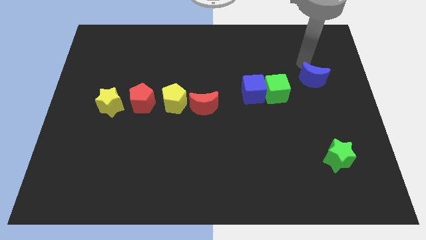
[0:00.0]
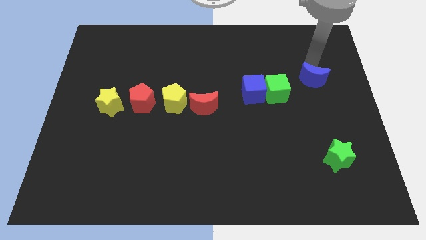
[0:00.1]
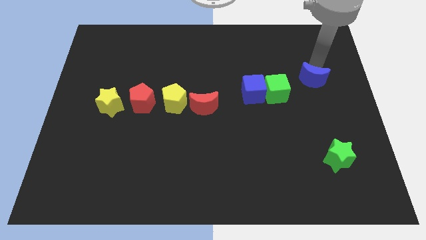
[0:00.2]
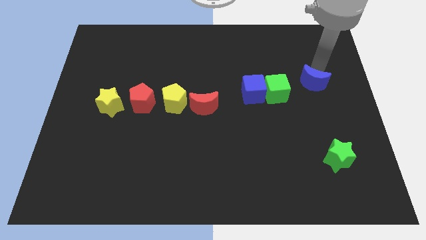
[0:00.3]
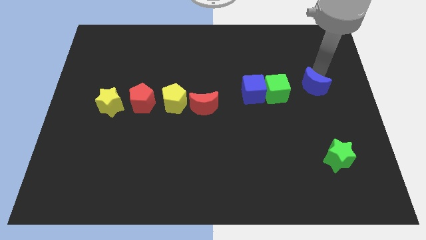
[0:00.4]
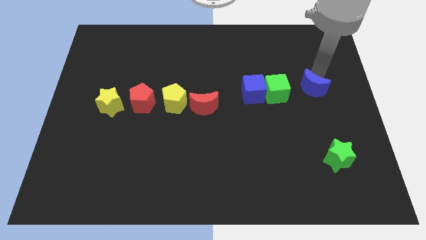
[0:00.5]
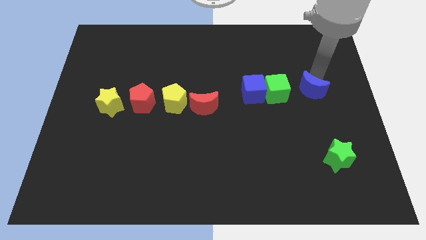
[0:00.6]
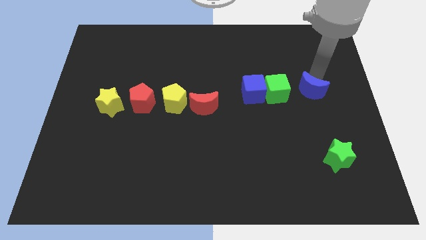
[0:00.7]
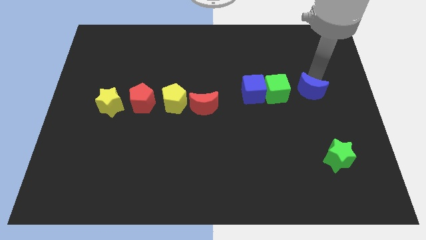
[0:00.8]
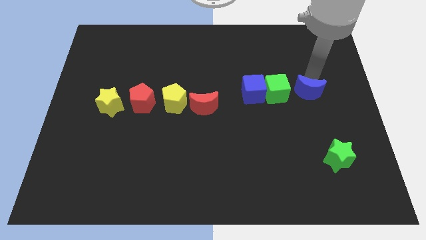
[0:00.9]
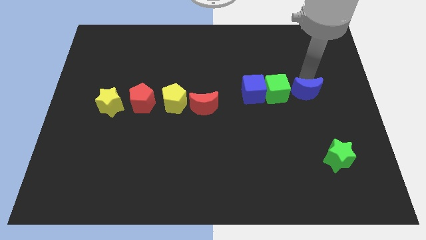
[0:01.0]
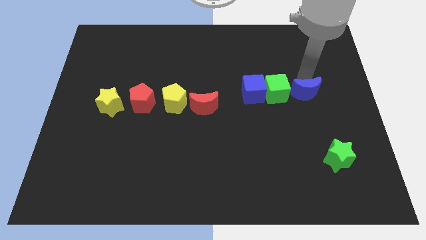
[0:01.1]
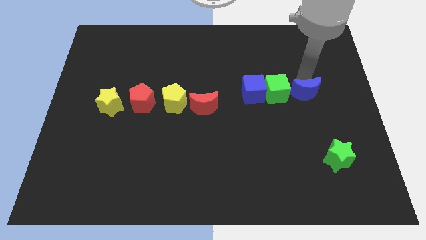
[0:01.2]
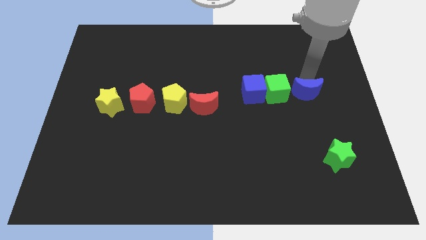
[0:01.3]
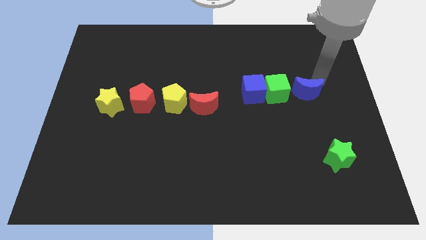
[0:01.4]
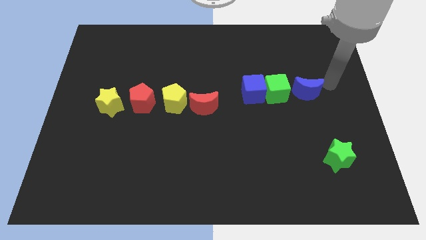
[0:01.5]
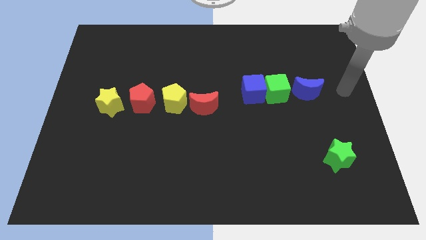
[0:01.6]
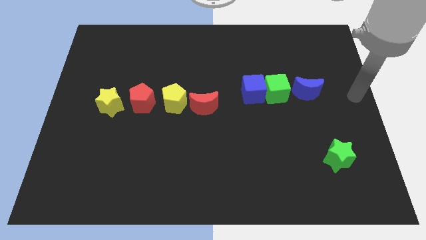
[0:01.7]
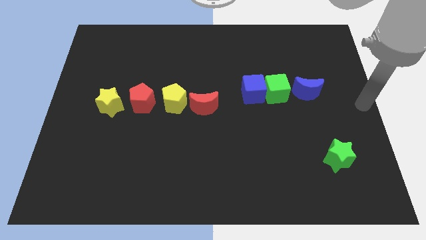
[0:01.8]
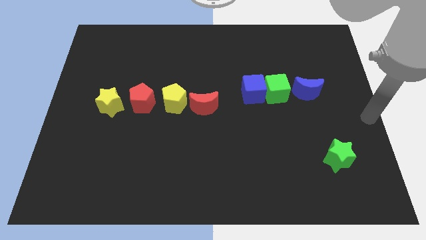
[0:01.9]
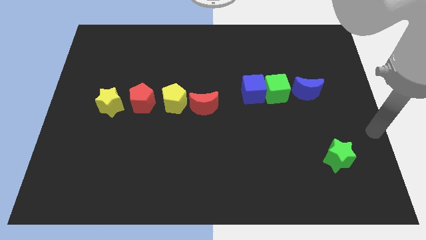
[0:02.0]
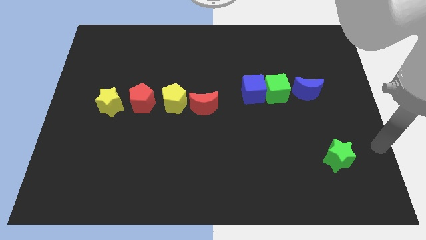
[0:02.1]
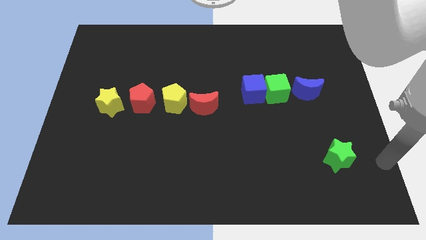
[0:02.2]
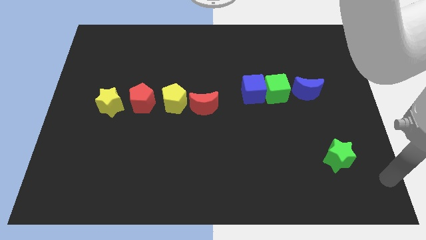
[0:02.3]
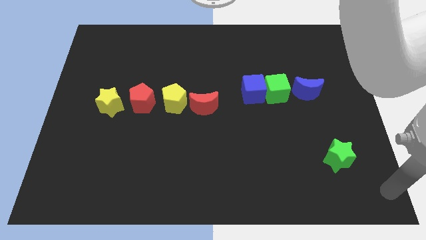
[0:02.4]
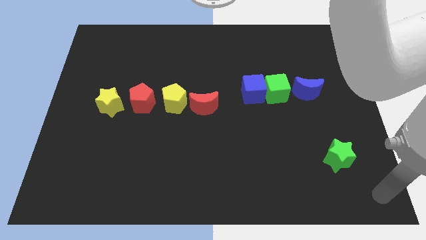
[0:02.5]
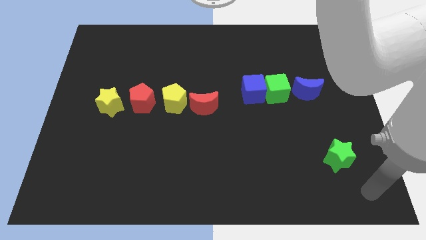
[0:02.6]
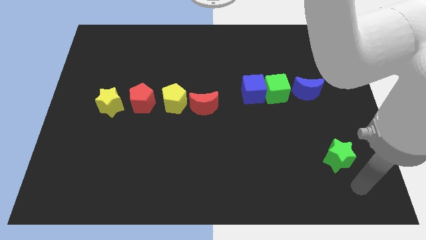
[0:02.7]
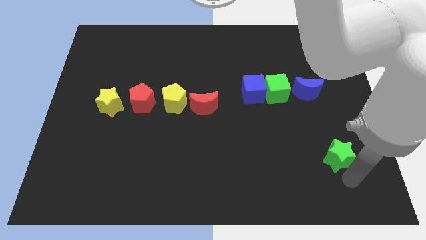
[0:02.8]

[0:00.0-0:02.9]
place the blue crescent to the right of green cube

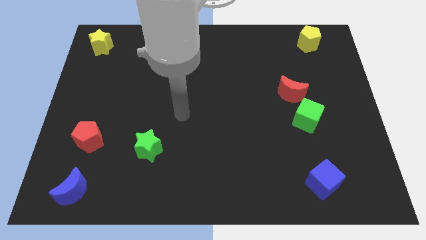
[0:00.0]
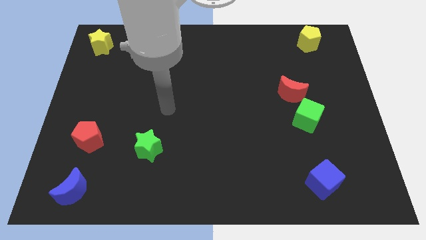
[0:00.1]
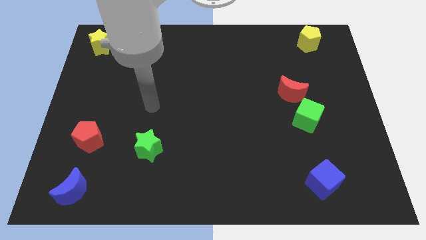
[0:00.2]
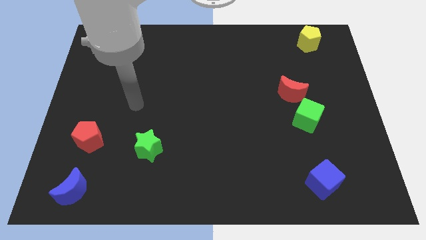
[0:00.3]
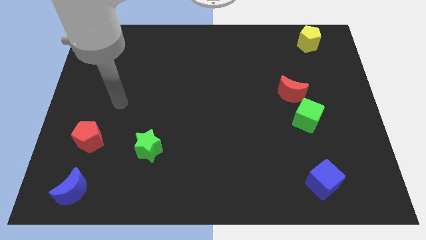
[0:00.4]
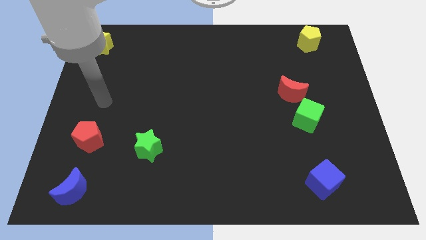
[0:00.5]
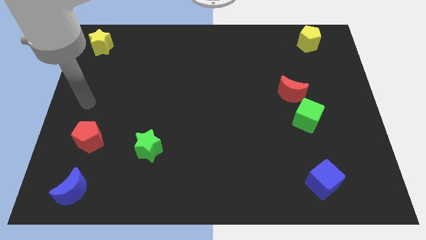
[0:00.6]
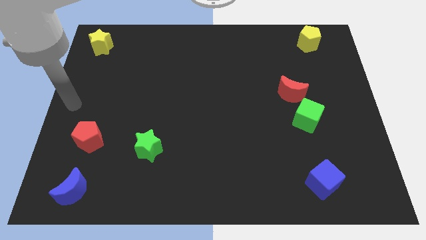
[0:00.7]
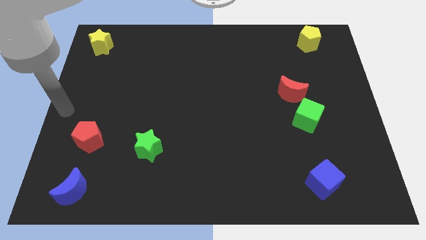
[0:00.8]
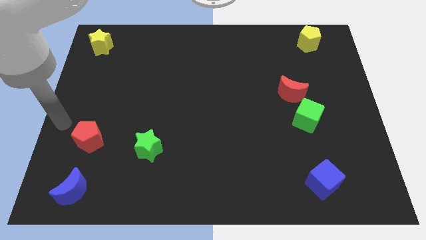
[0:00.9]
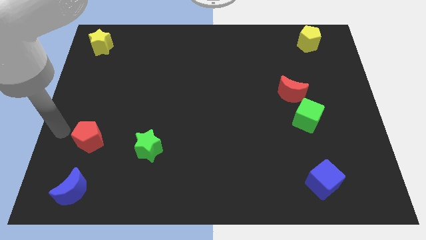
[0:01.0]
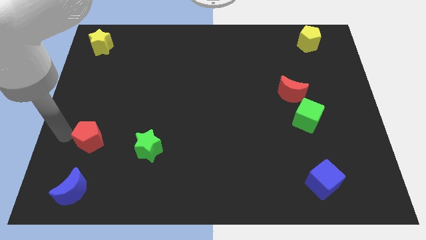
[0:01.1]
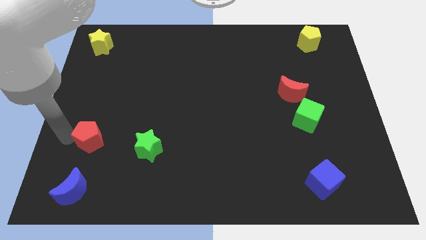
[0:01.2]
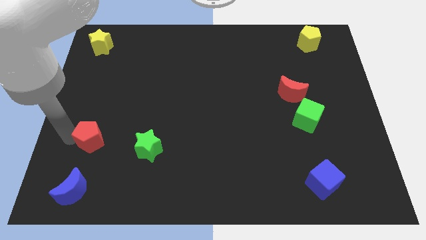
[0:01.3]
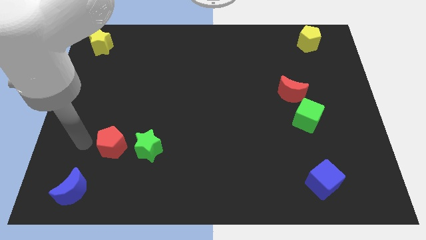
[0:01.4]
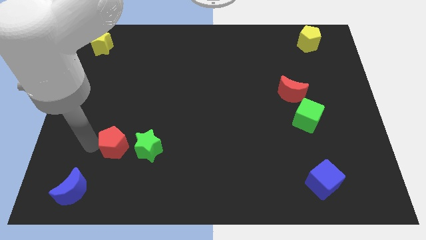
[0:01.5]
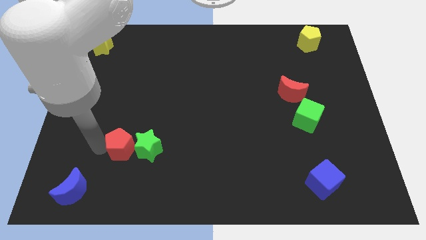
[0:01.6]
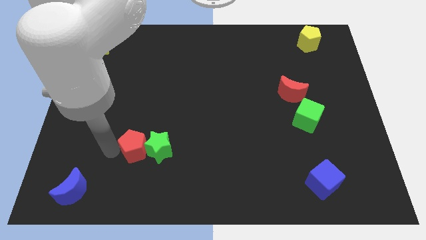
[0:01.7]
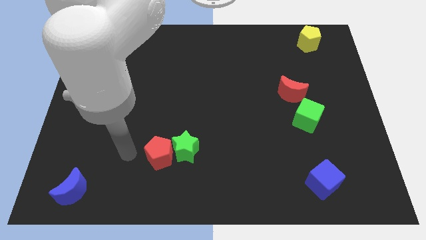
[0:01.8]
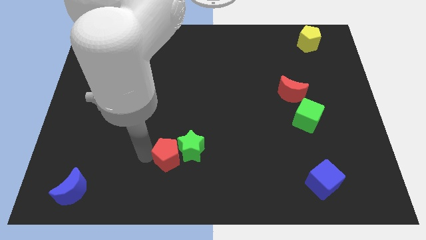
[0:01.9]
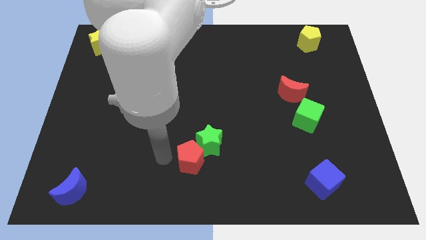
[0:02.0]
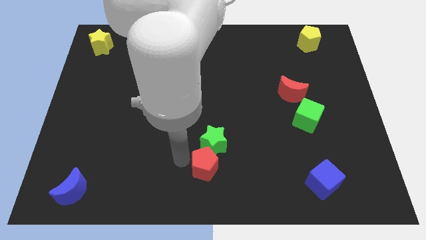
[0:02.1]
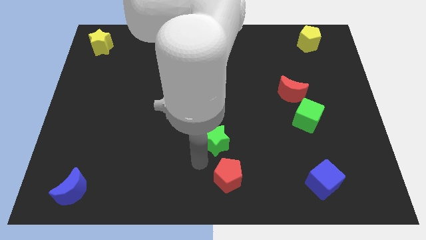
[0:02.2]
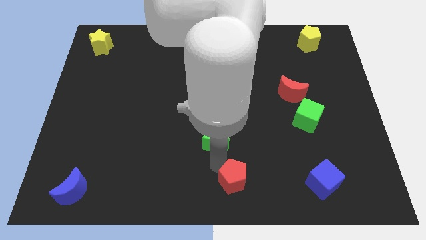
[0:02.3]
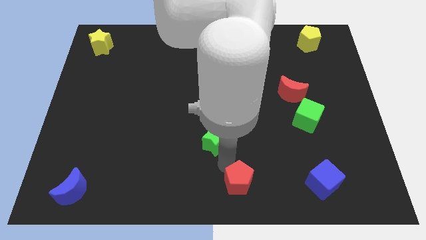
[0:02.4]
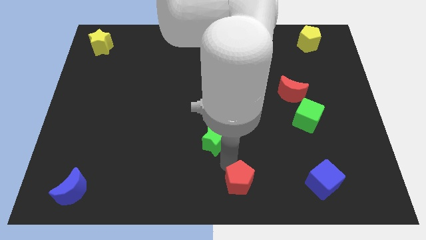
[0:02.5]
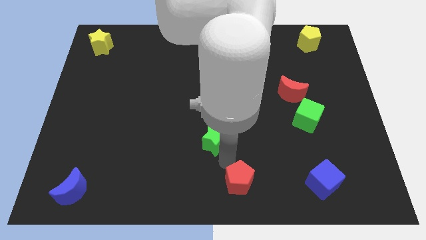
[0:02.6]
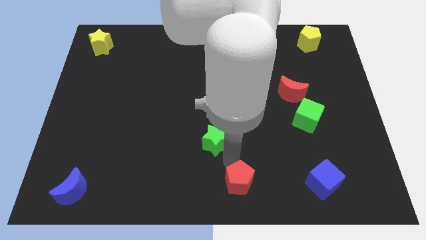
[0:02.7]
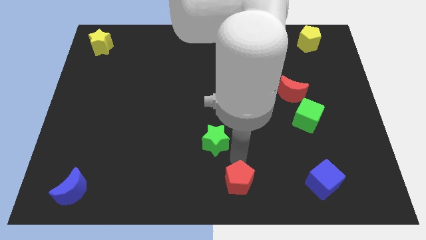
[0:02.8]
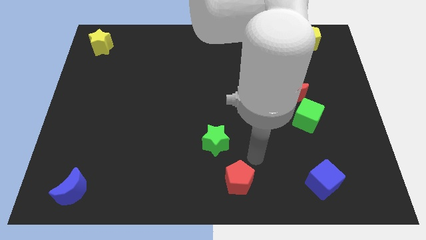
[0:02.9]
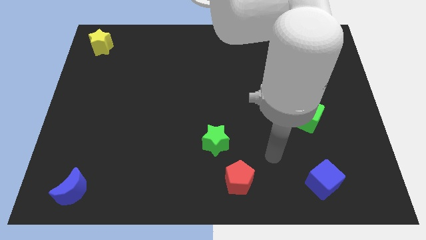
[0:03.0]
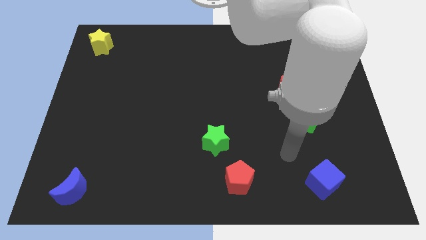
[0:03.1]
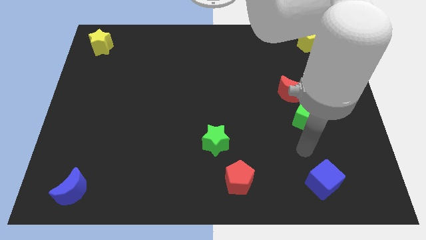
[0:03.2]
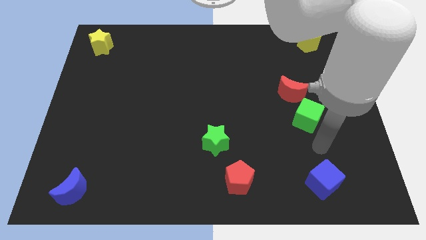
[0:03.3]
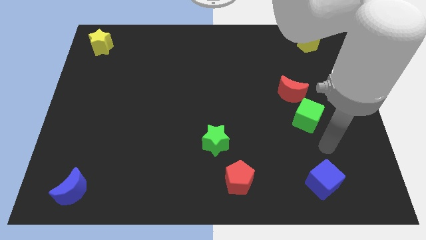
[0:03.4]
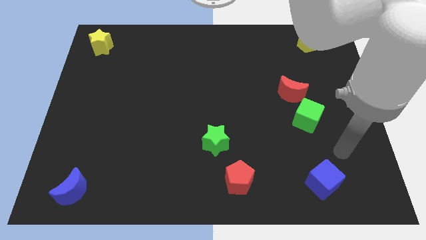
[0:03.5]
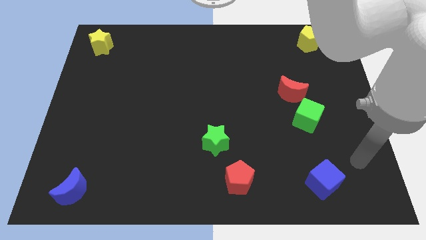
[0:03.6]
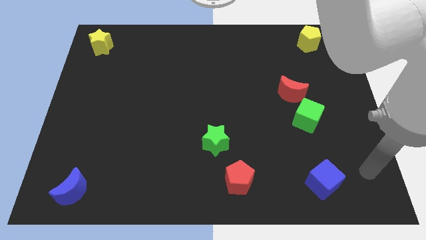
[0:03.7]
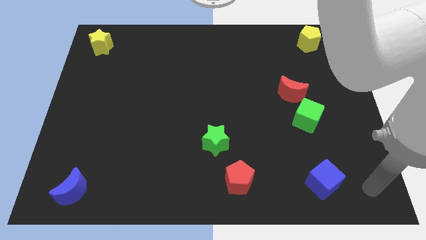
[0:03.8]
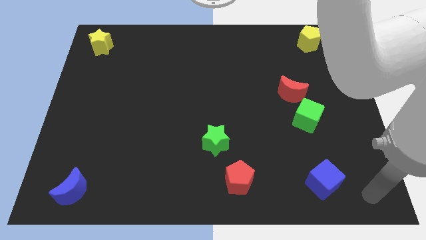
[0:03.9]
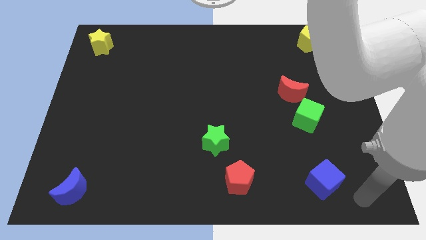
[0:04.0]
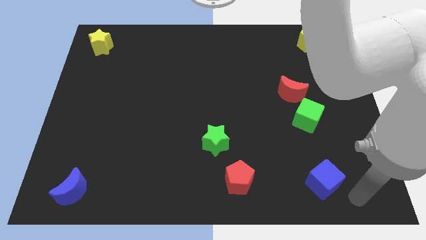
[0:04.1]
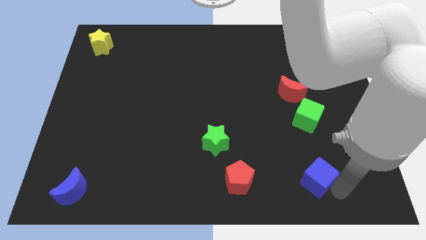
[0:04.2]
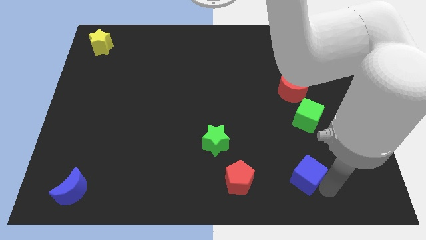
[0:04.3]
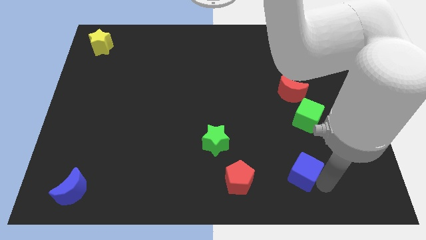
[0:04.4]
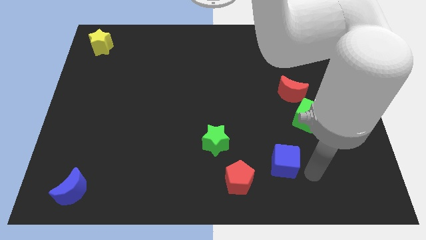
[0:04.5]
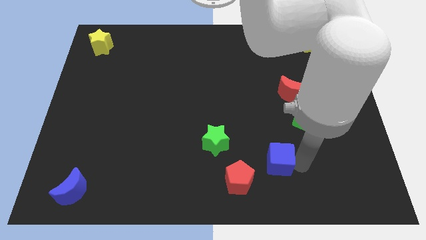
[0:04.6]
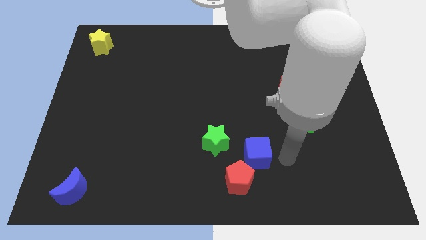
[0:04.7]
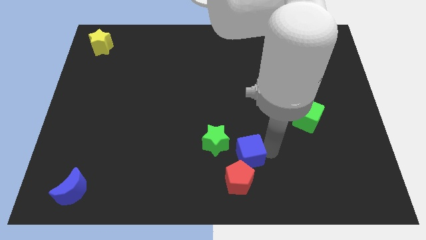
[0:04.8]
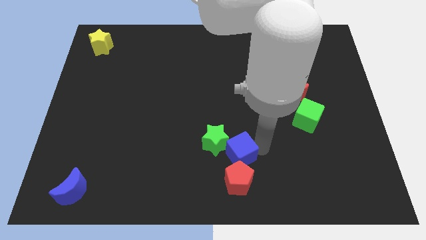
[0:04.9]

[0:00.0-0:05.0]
group up the green star blue cube and red pentagon at the bottom side of the table

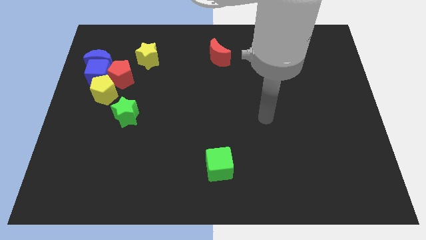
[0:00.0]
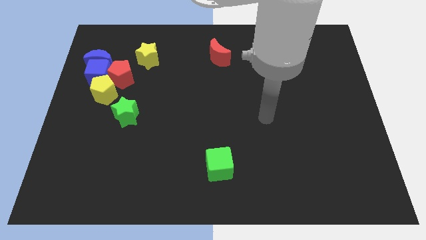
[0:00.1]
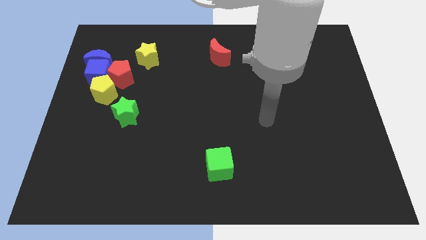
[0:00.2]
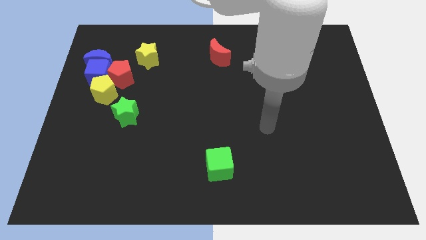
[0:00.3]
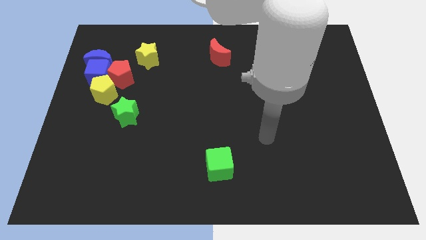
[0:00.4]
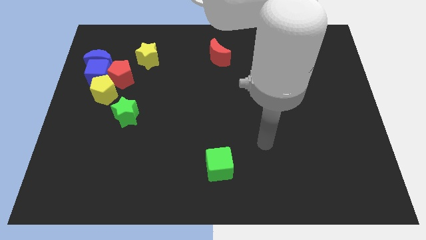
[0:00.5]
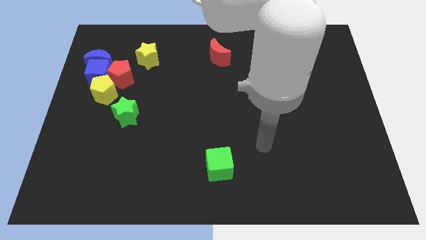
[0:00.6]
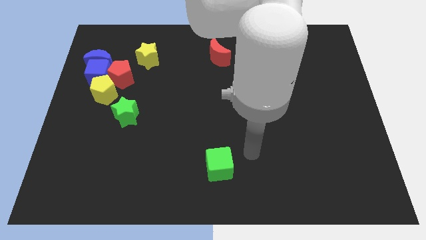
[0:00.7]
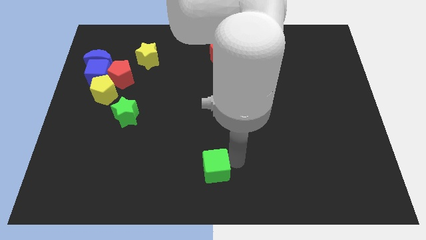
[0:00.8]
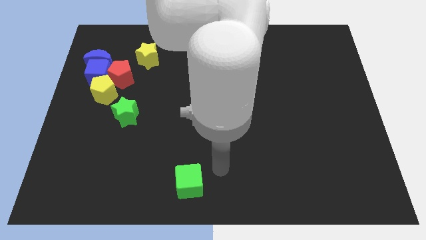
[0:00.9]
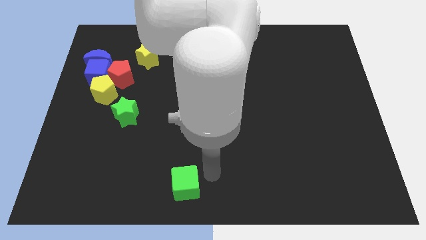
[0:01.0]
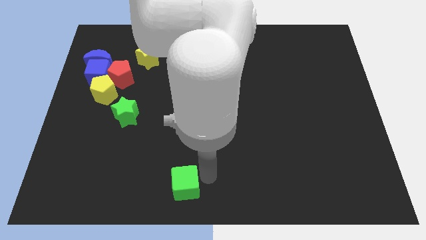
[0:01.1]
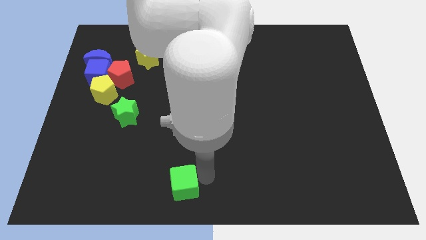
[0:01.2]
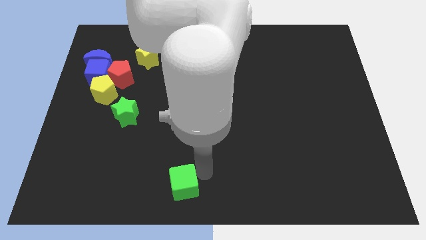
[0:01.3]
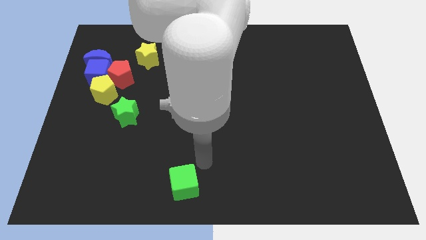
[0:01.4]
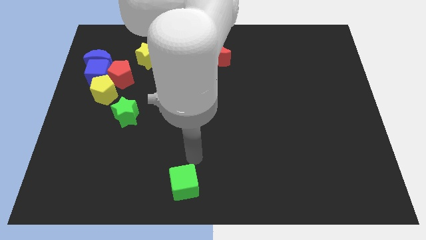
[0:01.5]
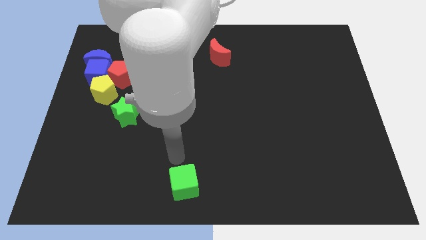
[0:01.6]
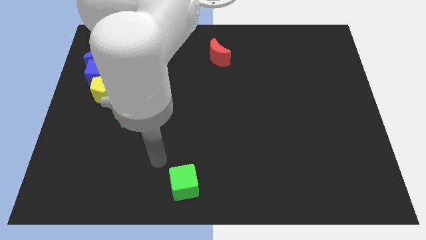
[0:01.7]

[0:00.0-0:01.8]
move the green cube downwards
